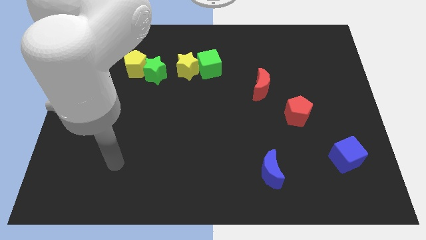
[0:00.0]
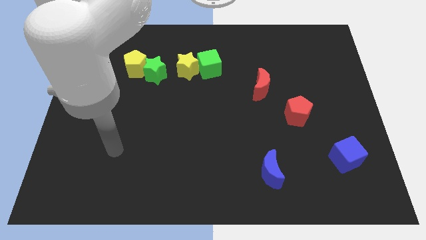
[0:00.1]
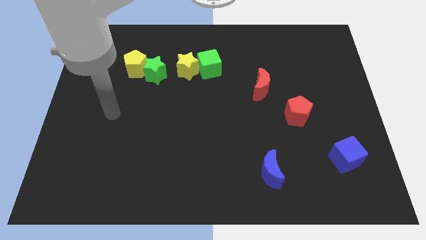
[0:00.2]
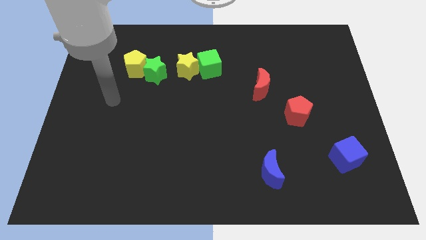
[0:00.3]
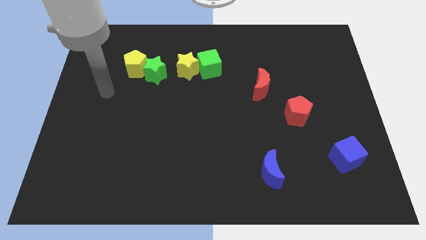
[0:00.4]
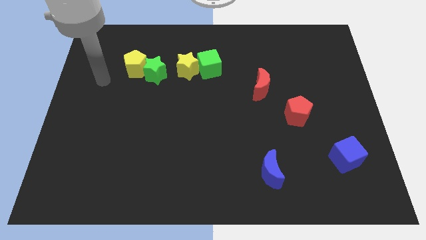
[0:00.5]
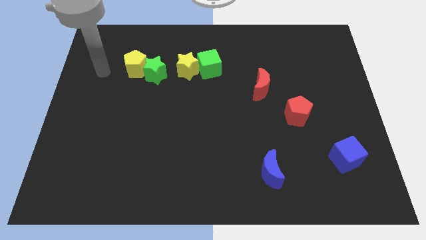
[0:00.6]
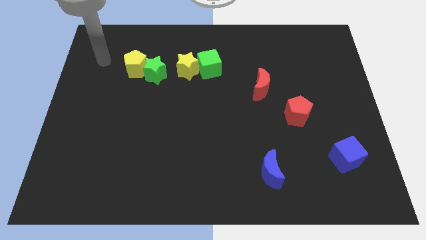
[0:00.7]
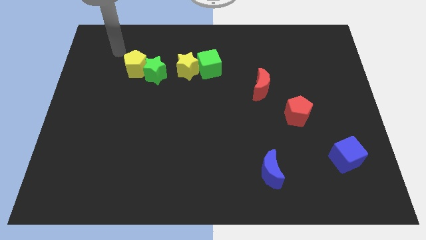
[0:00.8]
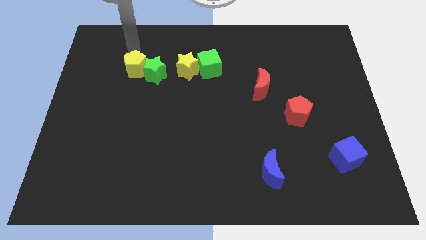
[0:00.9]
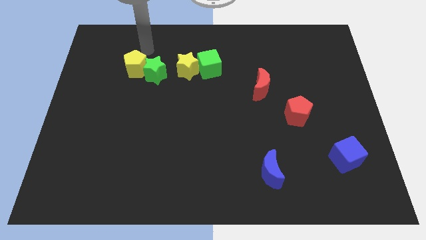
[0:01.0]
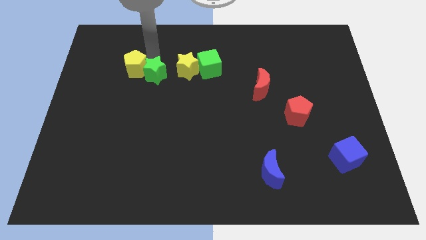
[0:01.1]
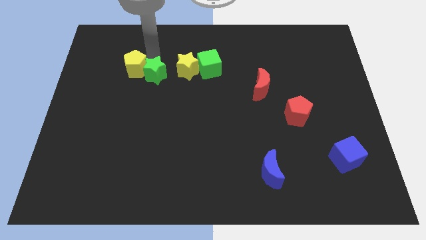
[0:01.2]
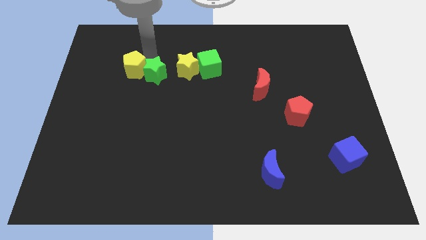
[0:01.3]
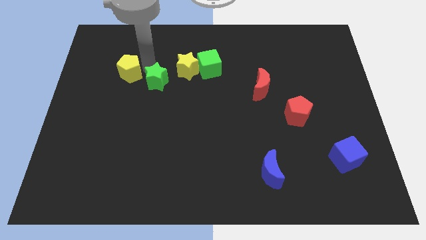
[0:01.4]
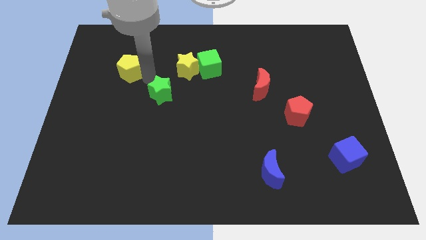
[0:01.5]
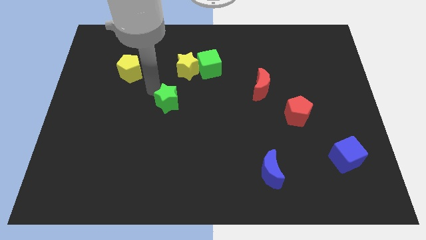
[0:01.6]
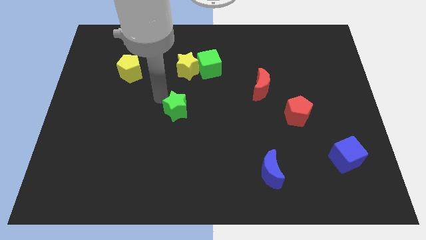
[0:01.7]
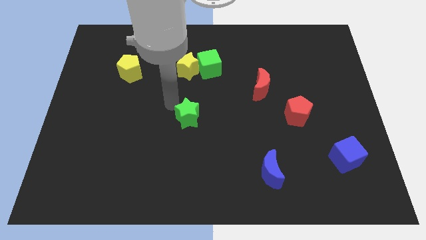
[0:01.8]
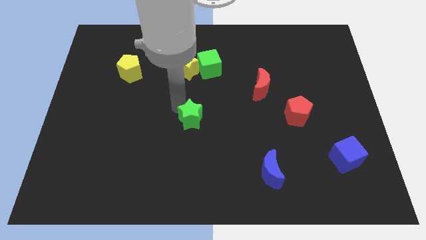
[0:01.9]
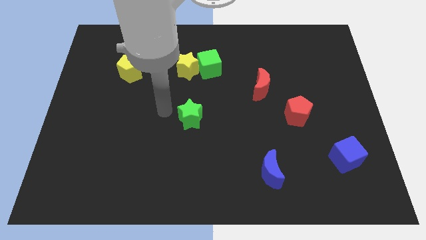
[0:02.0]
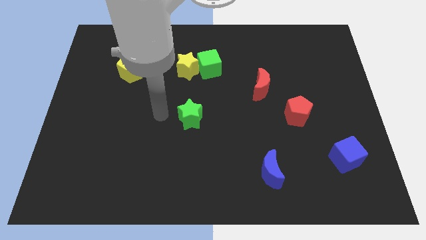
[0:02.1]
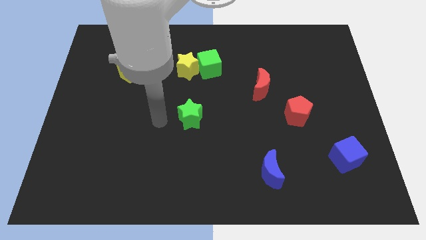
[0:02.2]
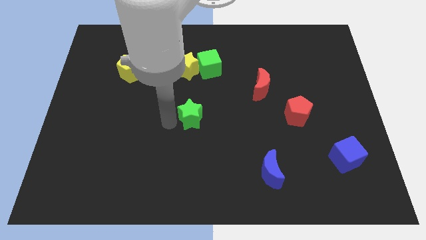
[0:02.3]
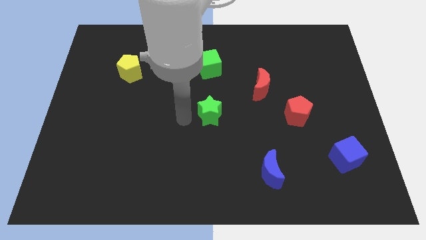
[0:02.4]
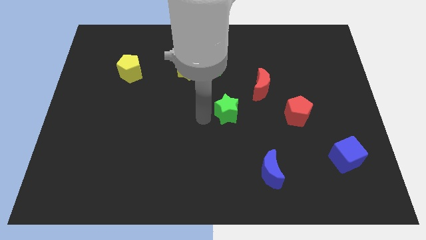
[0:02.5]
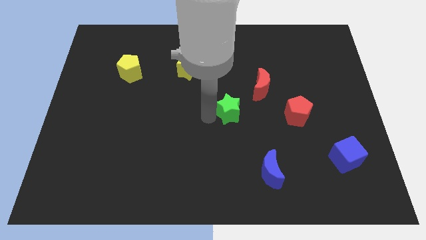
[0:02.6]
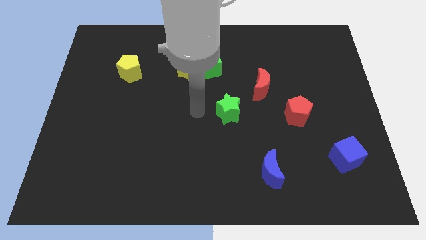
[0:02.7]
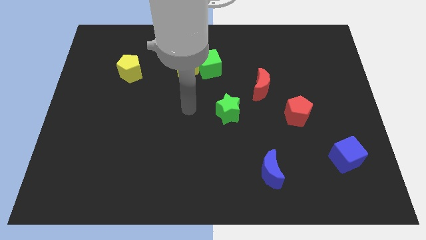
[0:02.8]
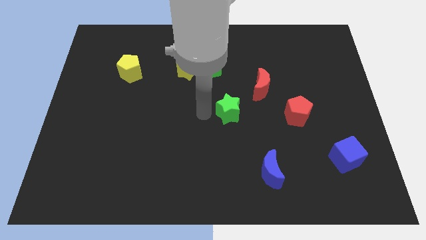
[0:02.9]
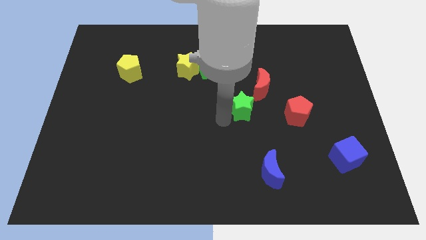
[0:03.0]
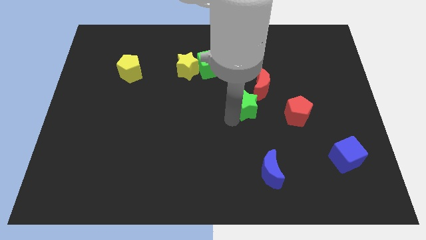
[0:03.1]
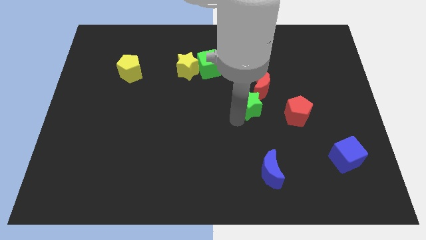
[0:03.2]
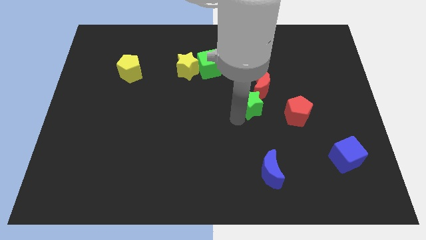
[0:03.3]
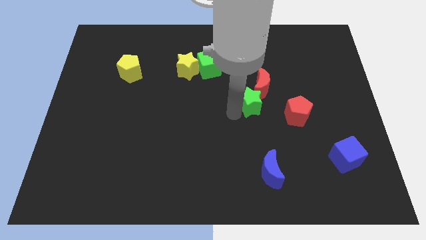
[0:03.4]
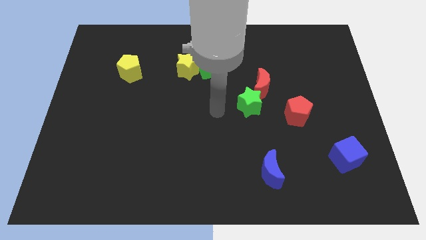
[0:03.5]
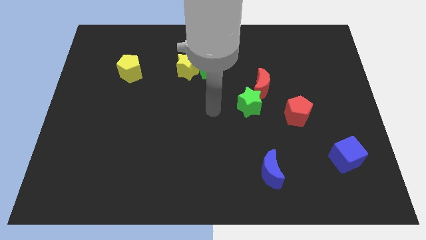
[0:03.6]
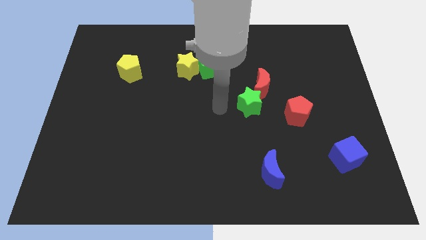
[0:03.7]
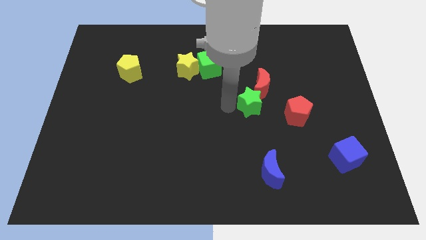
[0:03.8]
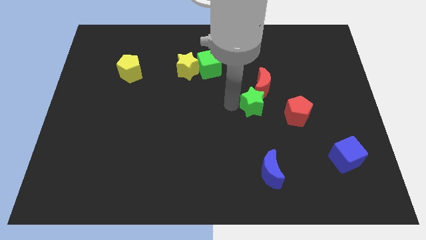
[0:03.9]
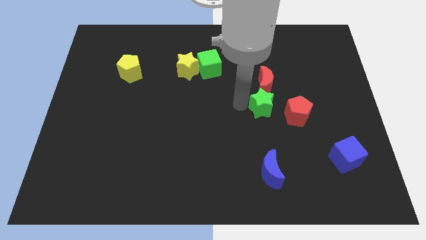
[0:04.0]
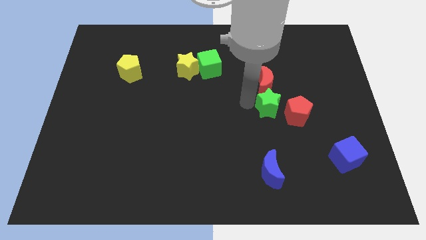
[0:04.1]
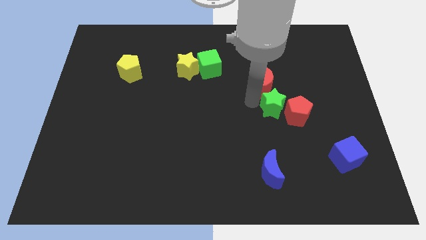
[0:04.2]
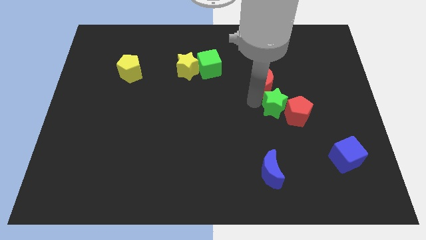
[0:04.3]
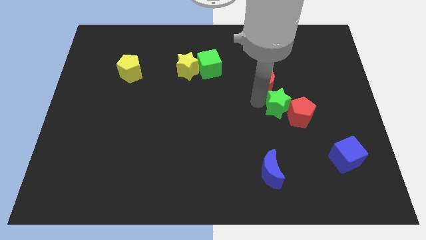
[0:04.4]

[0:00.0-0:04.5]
put the green star close to the red pentagon

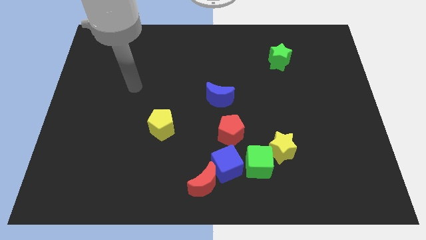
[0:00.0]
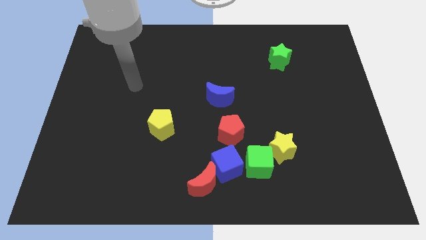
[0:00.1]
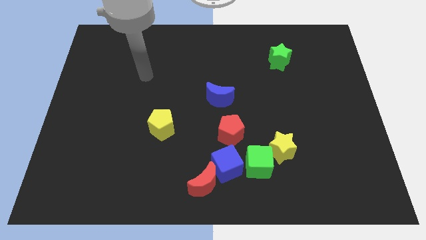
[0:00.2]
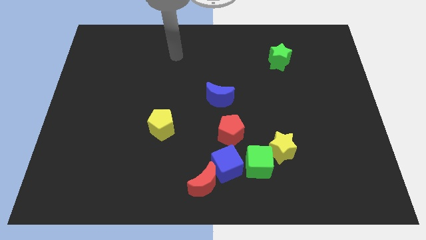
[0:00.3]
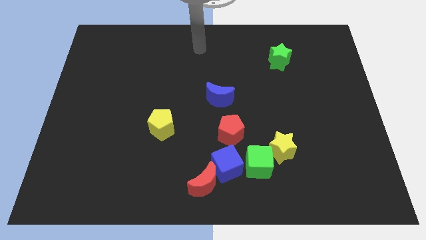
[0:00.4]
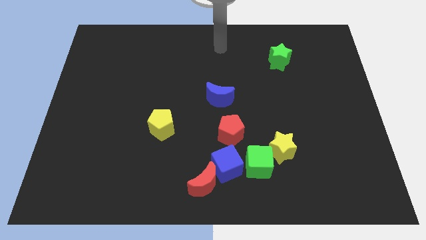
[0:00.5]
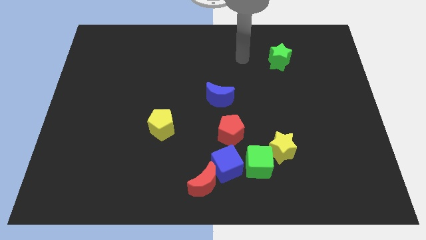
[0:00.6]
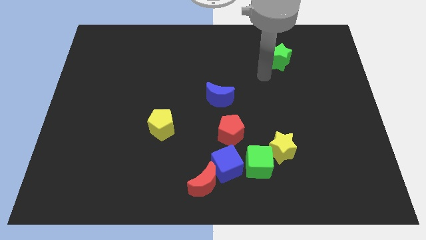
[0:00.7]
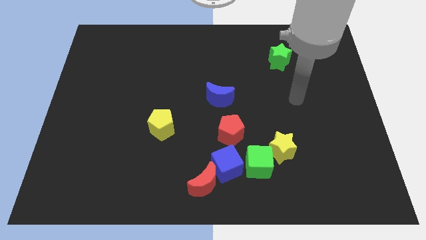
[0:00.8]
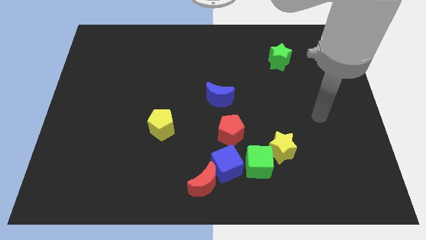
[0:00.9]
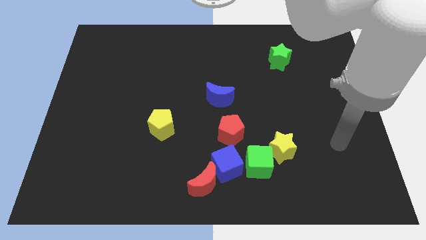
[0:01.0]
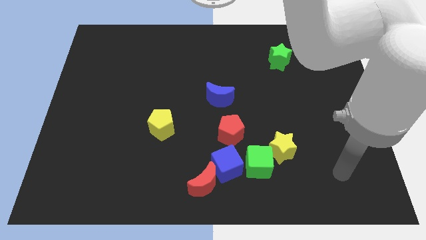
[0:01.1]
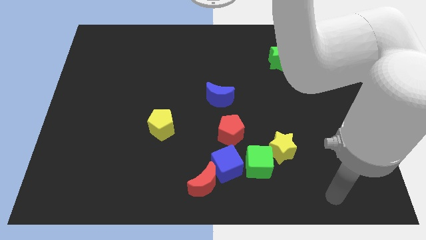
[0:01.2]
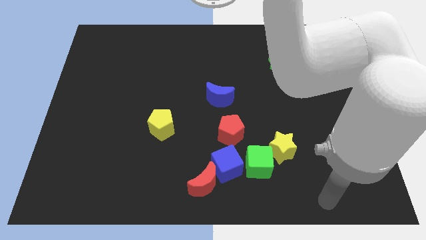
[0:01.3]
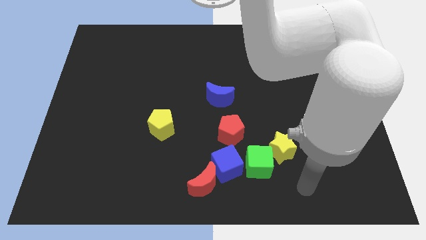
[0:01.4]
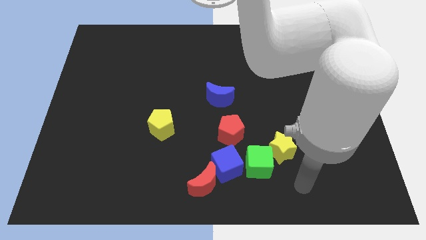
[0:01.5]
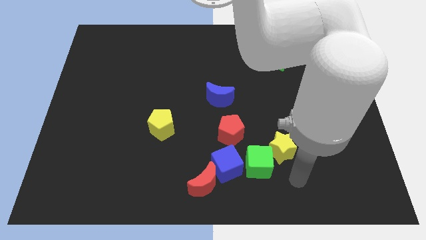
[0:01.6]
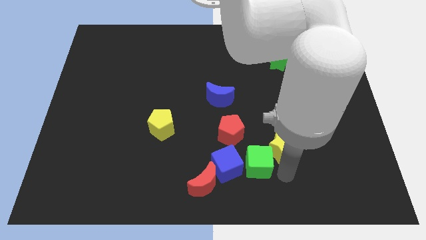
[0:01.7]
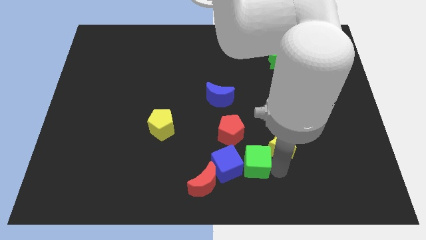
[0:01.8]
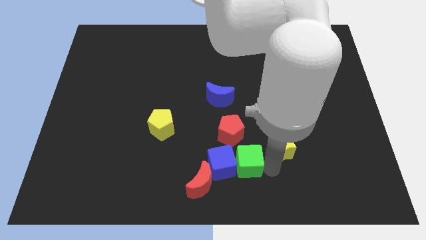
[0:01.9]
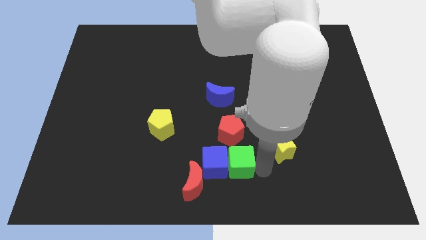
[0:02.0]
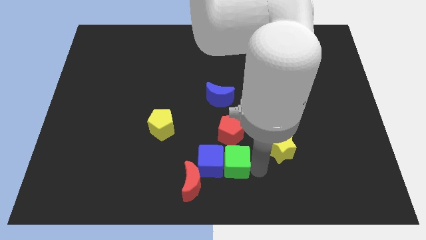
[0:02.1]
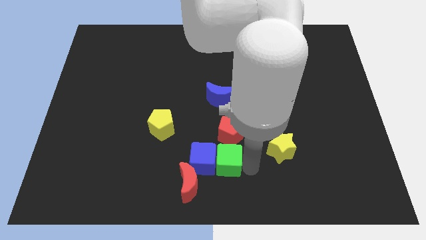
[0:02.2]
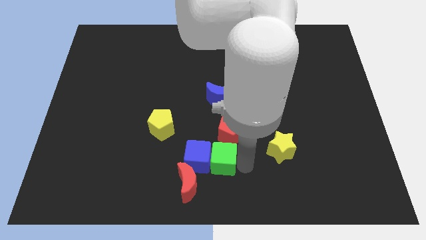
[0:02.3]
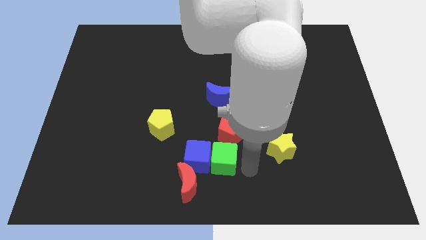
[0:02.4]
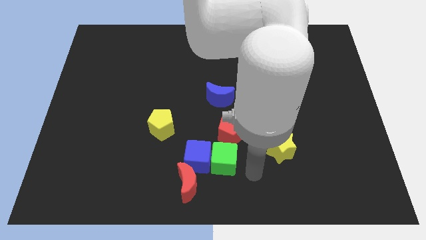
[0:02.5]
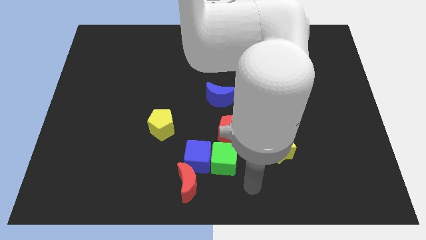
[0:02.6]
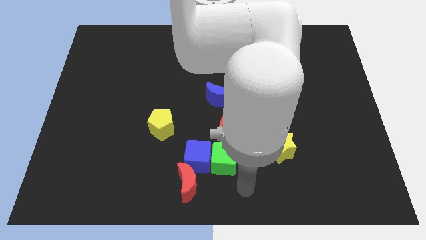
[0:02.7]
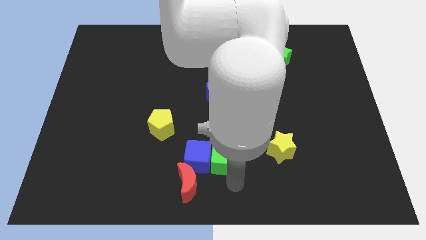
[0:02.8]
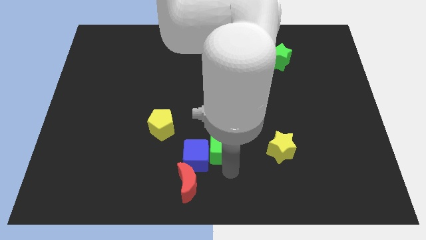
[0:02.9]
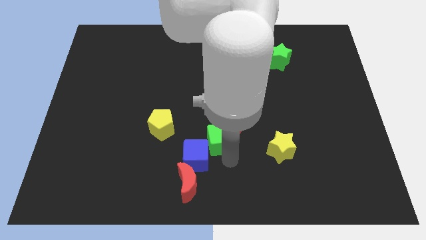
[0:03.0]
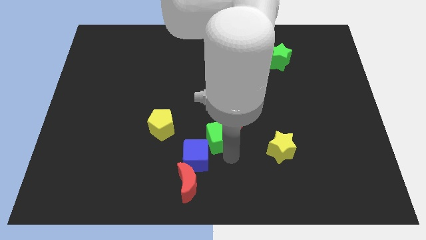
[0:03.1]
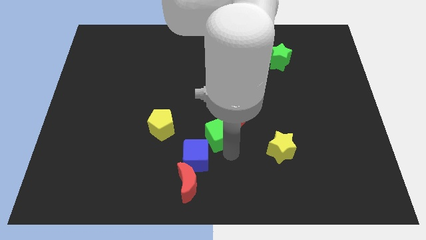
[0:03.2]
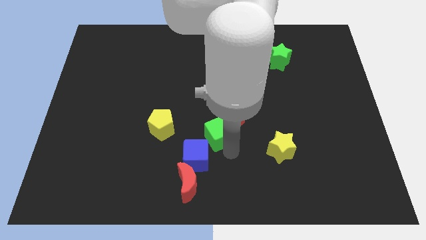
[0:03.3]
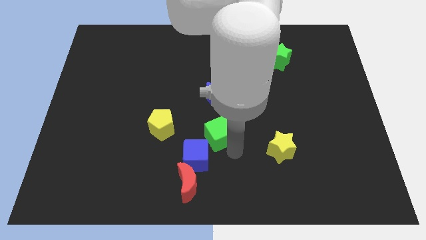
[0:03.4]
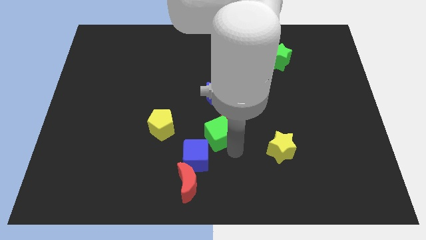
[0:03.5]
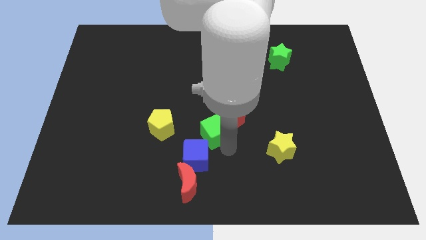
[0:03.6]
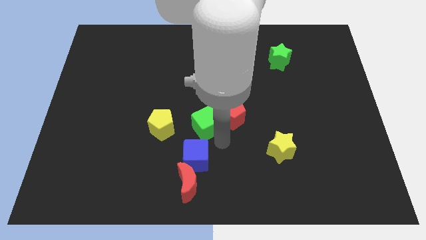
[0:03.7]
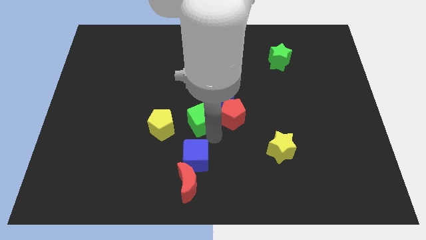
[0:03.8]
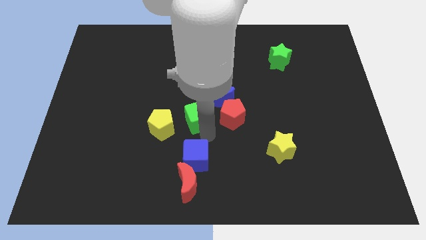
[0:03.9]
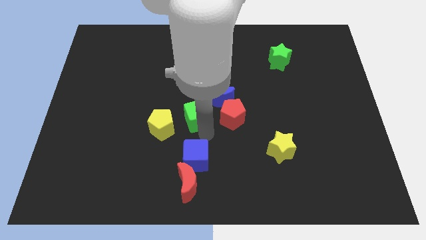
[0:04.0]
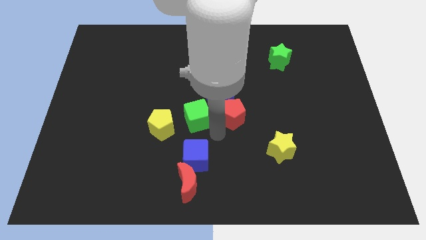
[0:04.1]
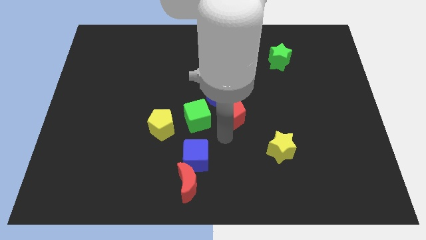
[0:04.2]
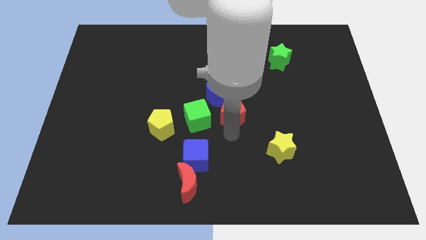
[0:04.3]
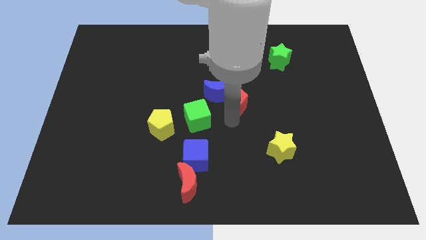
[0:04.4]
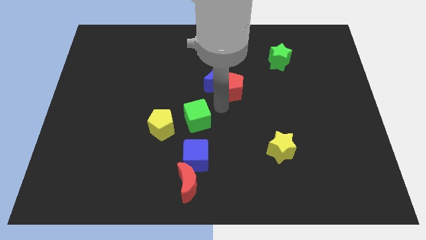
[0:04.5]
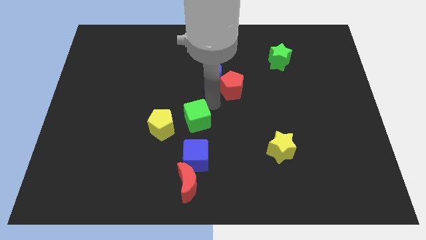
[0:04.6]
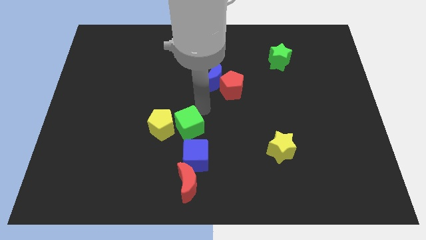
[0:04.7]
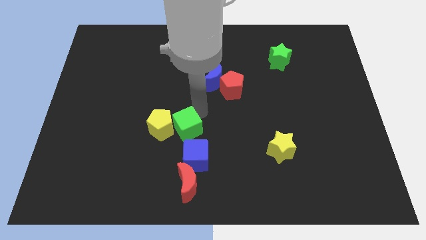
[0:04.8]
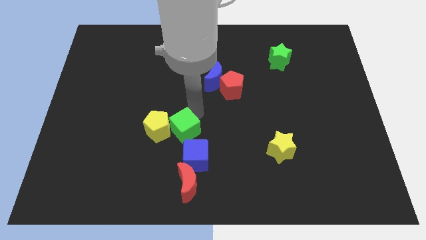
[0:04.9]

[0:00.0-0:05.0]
move the green cube close to the yellow pentagon
